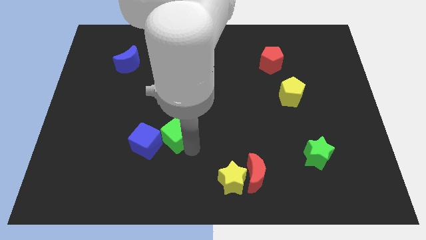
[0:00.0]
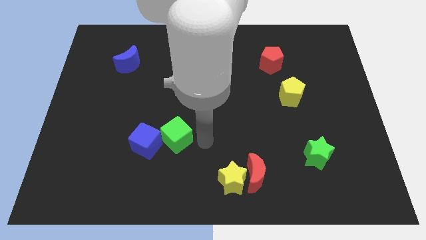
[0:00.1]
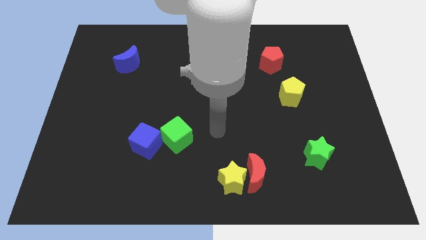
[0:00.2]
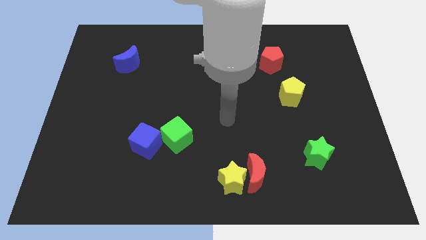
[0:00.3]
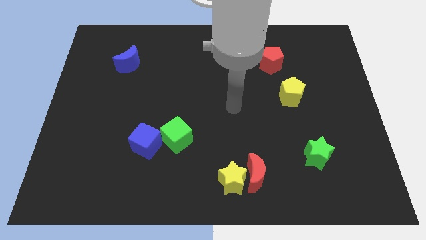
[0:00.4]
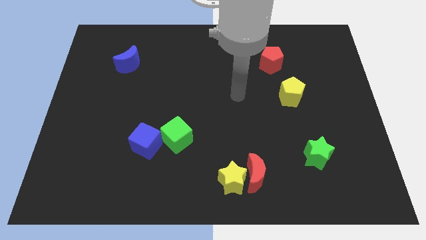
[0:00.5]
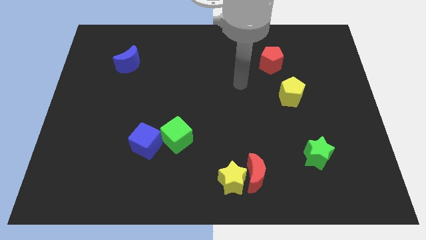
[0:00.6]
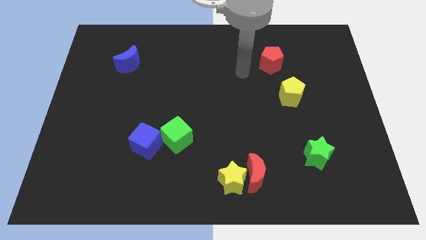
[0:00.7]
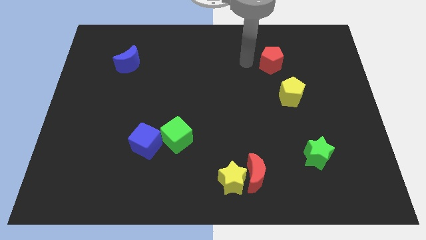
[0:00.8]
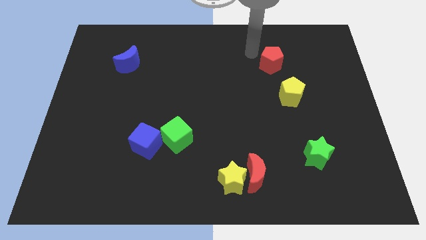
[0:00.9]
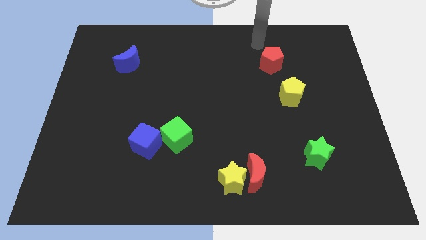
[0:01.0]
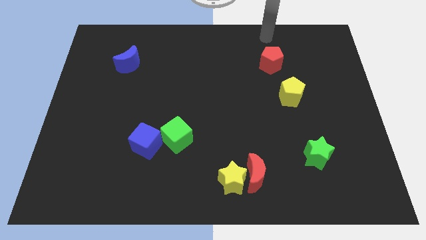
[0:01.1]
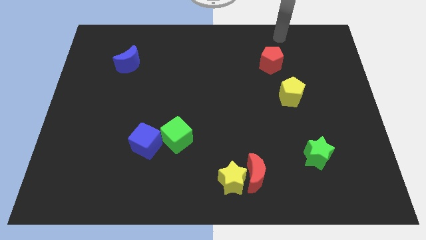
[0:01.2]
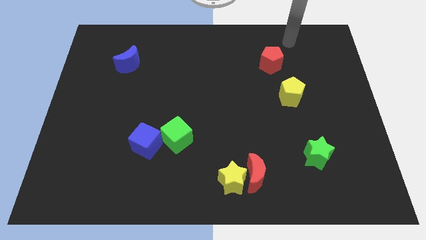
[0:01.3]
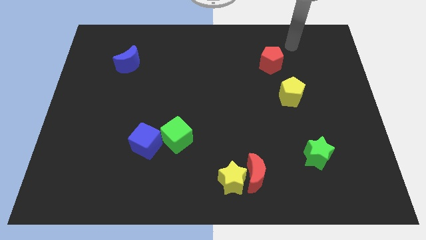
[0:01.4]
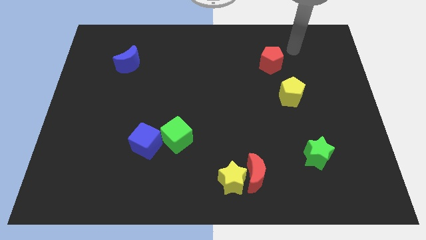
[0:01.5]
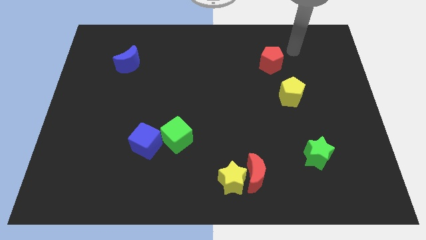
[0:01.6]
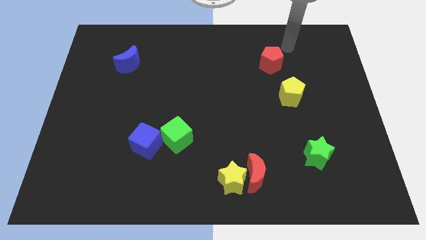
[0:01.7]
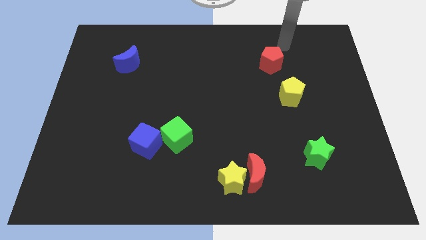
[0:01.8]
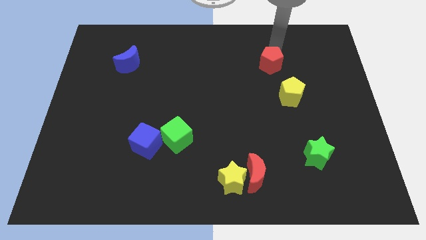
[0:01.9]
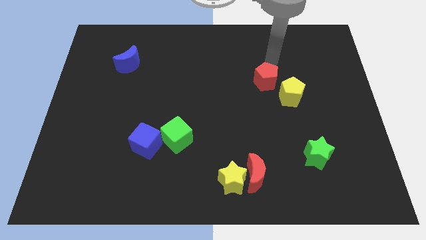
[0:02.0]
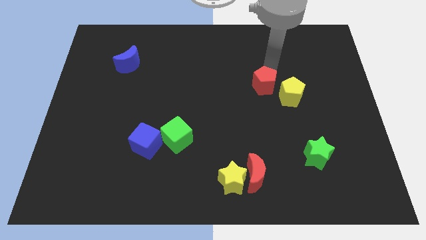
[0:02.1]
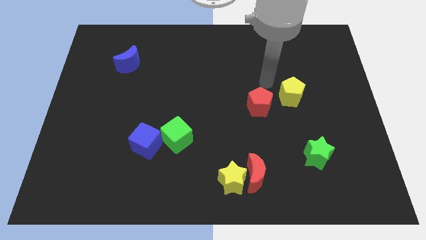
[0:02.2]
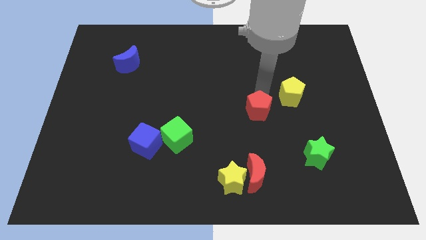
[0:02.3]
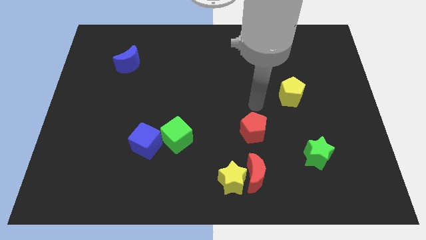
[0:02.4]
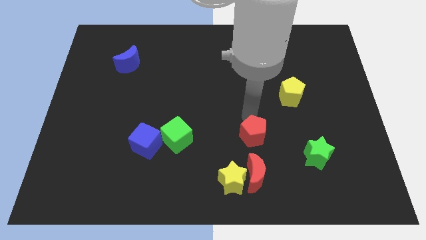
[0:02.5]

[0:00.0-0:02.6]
place red pentagon to the top of red moon

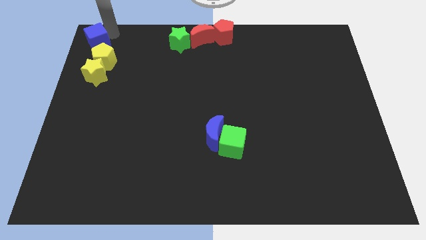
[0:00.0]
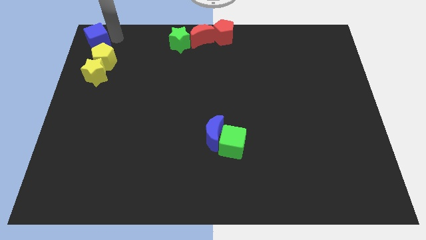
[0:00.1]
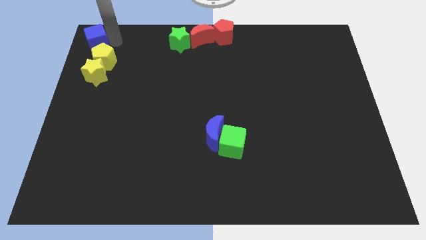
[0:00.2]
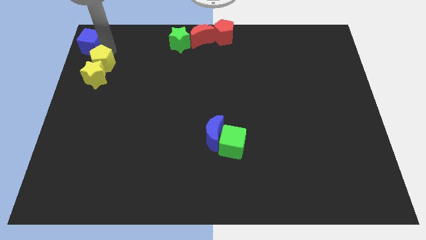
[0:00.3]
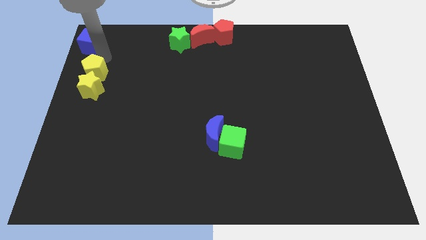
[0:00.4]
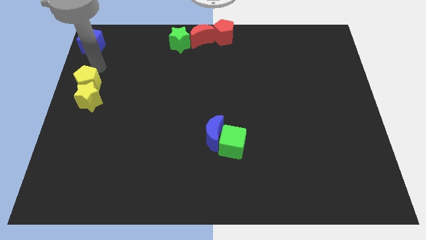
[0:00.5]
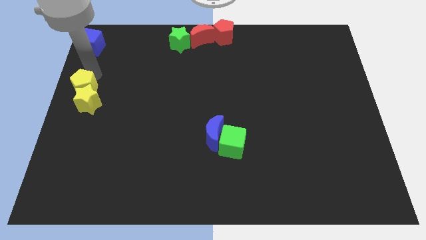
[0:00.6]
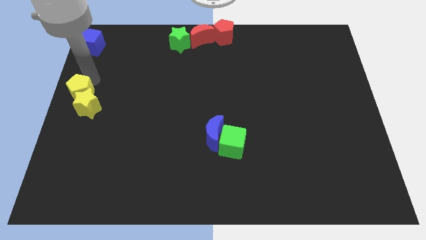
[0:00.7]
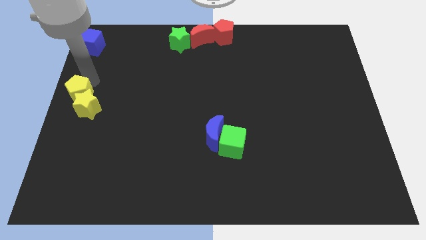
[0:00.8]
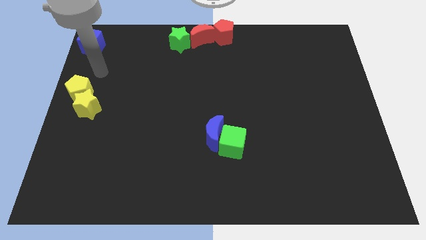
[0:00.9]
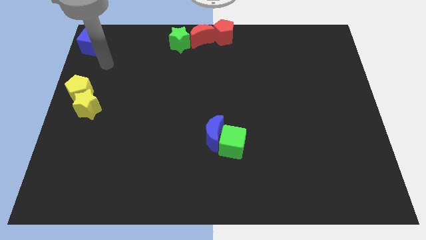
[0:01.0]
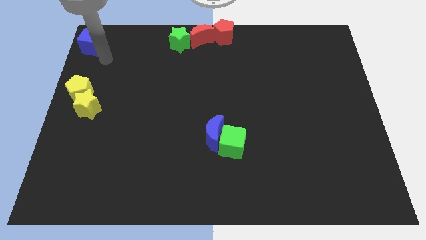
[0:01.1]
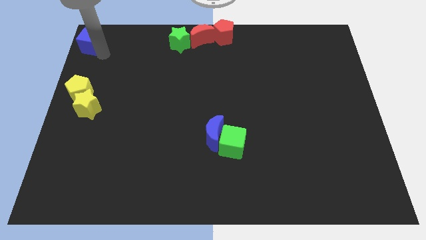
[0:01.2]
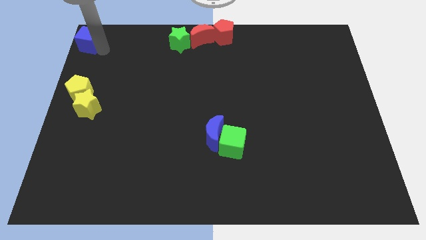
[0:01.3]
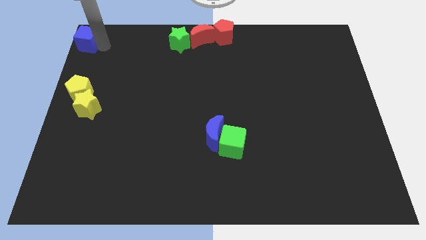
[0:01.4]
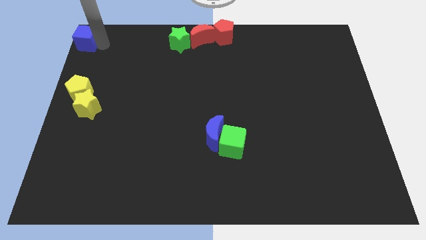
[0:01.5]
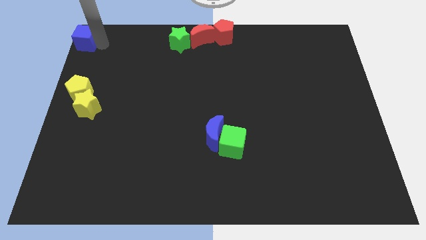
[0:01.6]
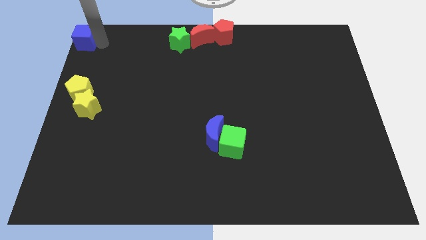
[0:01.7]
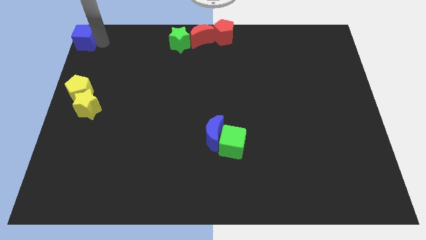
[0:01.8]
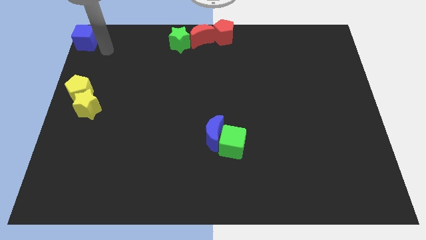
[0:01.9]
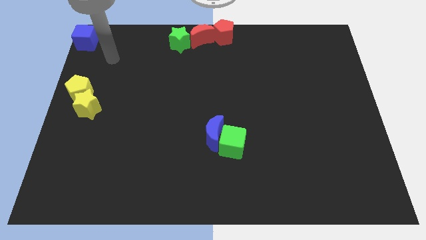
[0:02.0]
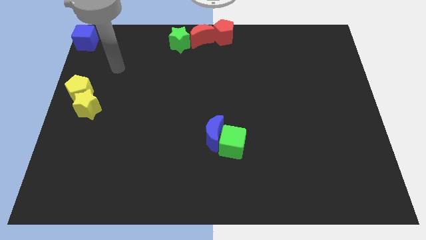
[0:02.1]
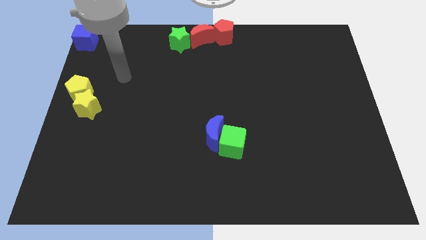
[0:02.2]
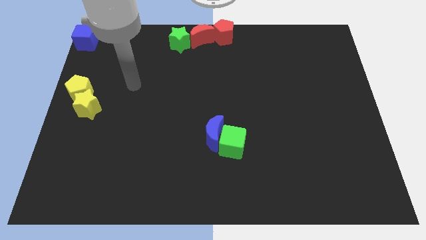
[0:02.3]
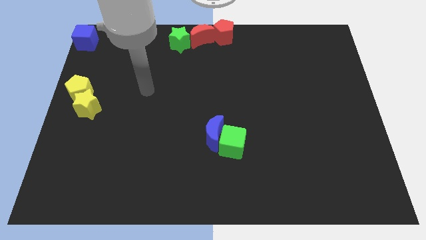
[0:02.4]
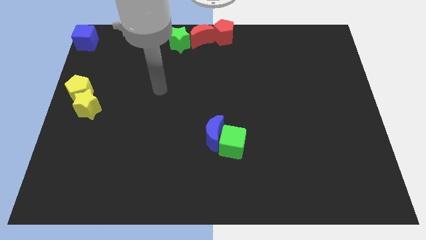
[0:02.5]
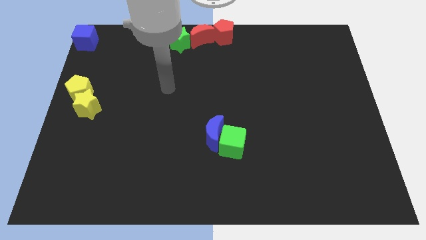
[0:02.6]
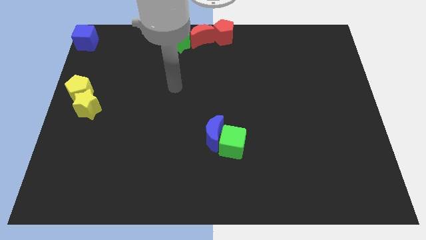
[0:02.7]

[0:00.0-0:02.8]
move the blue cube to the top left

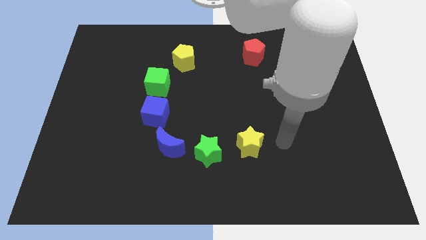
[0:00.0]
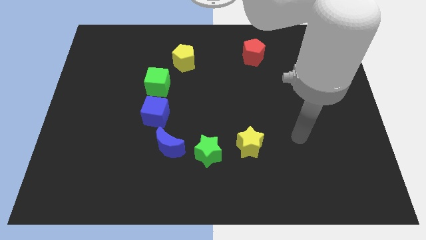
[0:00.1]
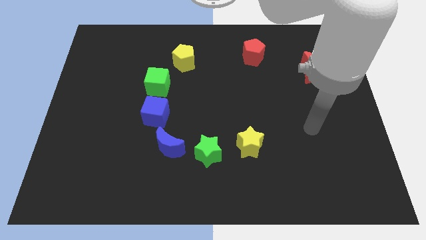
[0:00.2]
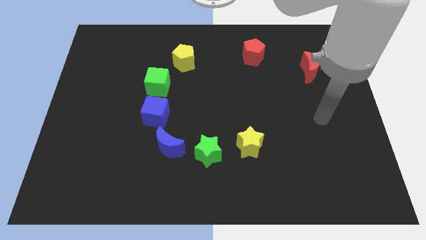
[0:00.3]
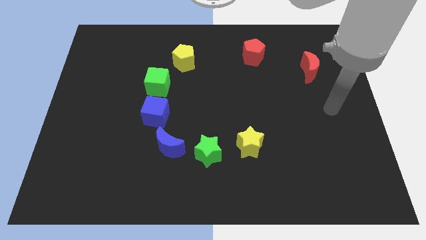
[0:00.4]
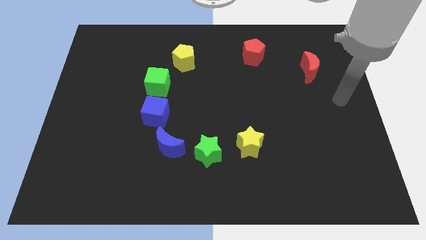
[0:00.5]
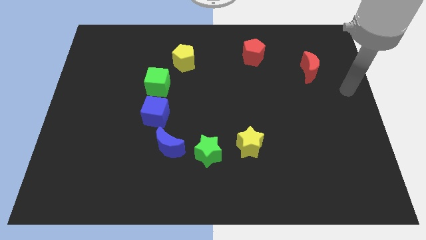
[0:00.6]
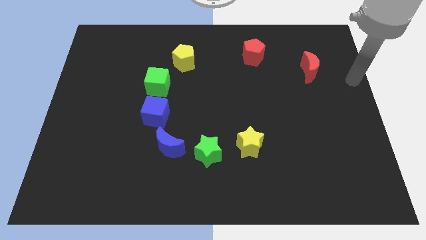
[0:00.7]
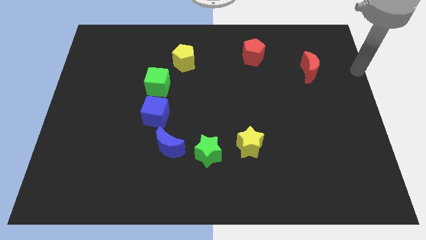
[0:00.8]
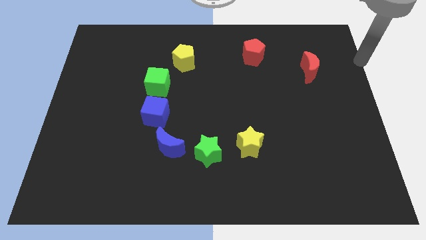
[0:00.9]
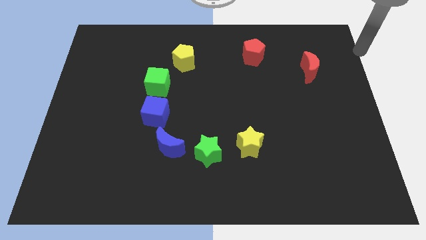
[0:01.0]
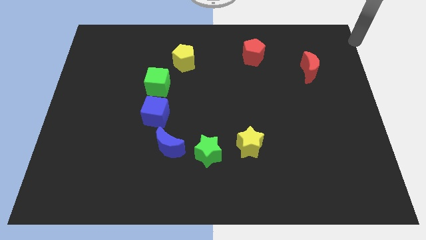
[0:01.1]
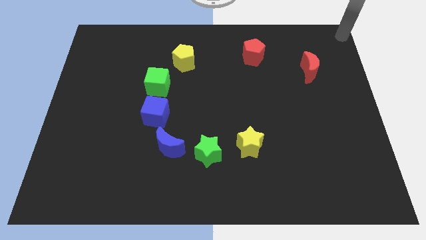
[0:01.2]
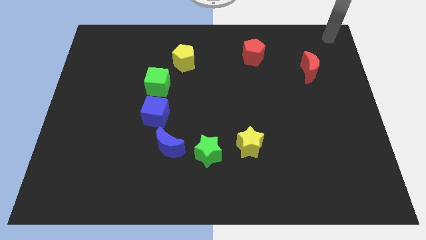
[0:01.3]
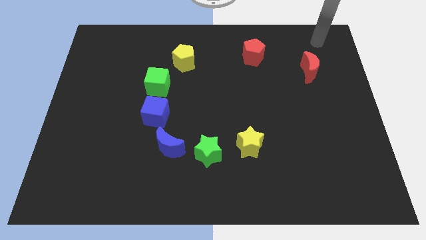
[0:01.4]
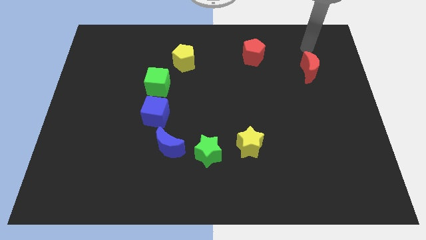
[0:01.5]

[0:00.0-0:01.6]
move yourself away from the yellow star

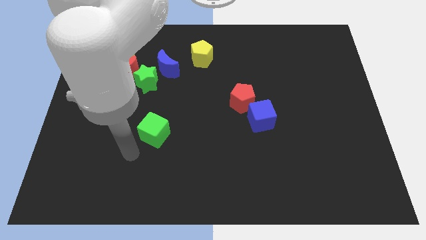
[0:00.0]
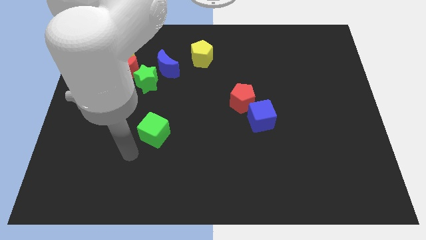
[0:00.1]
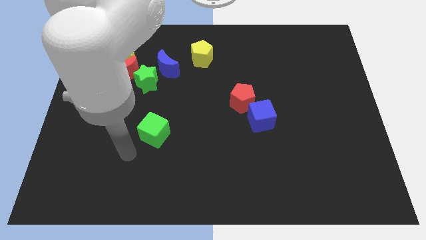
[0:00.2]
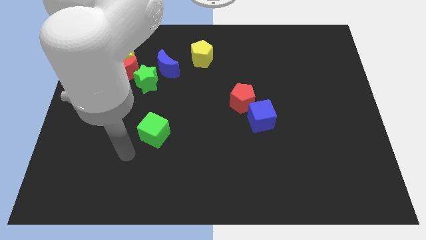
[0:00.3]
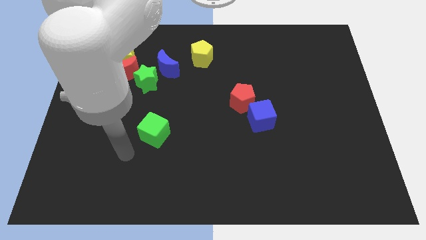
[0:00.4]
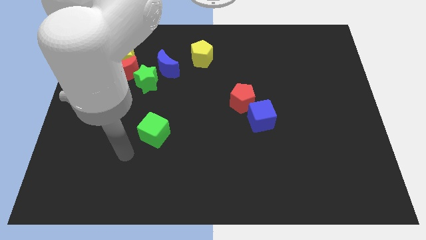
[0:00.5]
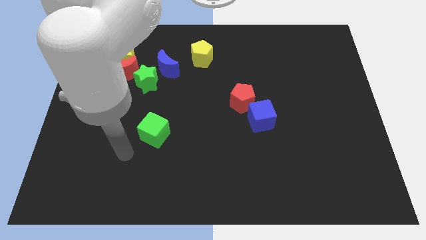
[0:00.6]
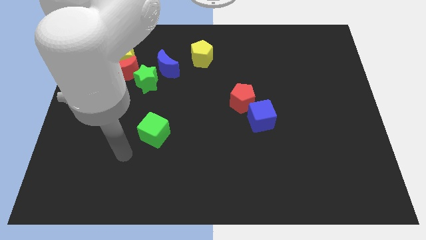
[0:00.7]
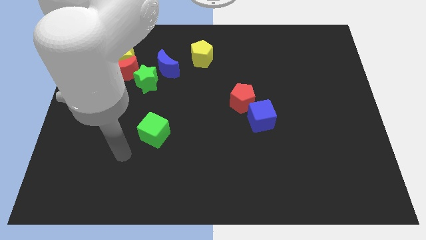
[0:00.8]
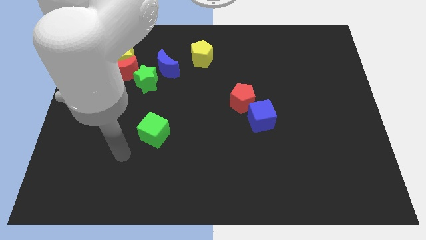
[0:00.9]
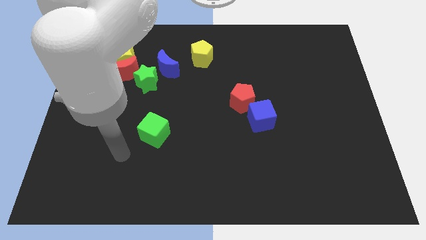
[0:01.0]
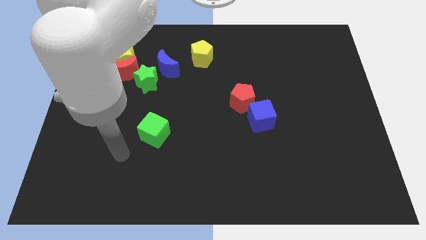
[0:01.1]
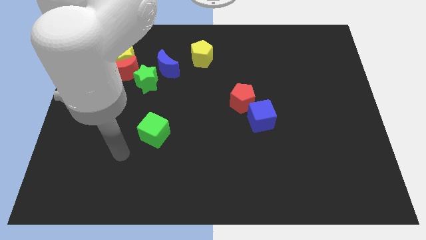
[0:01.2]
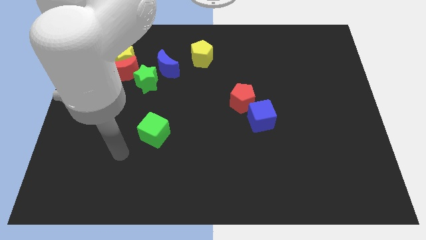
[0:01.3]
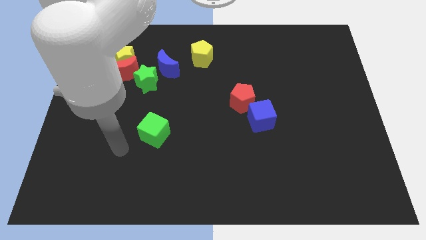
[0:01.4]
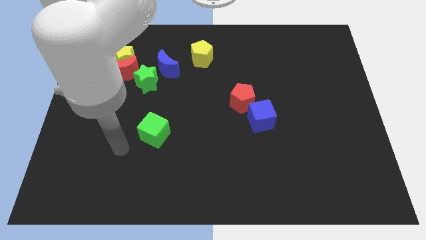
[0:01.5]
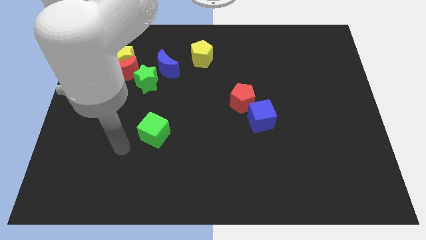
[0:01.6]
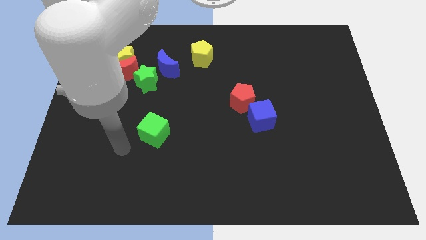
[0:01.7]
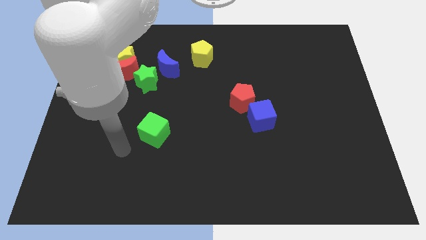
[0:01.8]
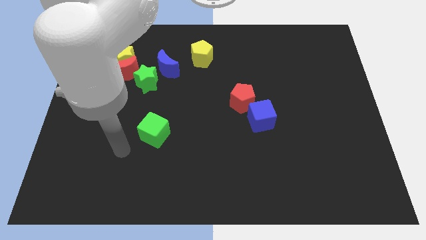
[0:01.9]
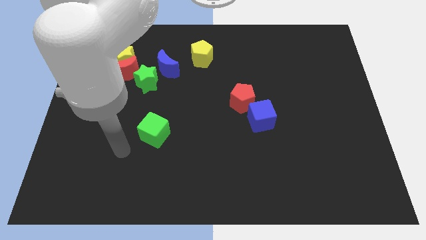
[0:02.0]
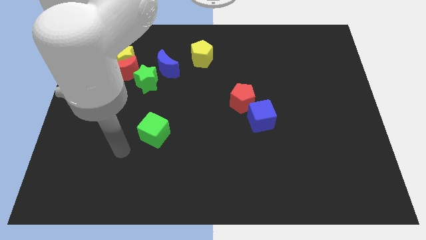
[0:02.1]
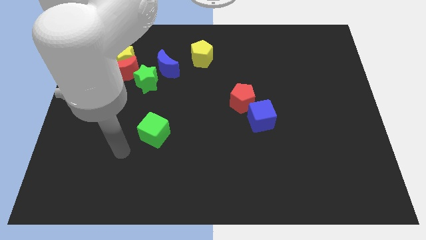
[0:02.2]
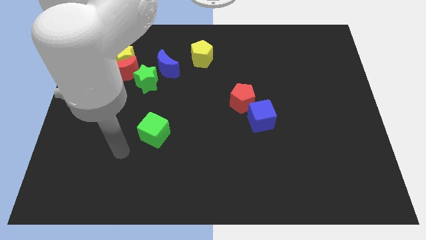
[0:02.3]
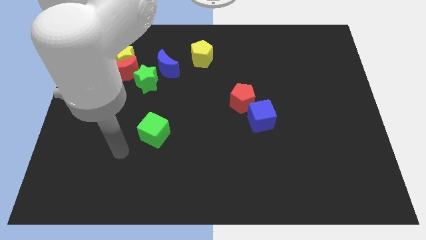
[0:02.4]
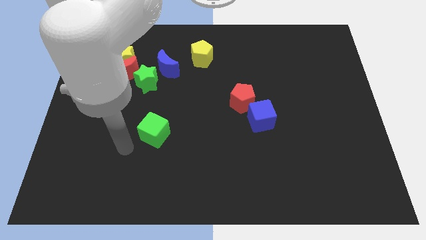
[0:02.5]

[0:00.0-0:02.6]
move your arm towards the green cube
